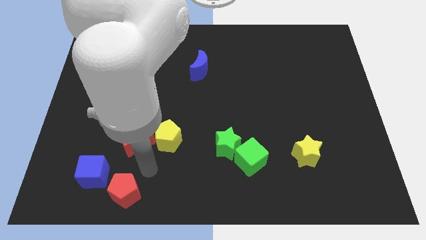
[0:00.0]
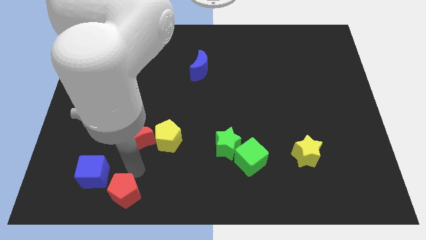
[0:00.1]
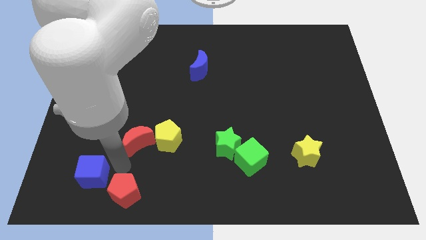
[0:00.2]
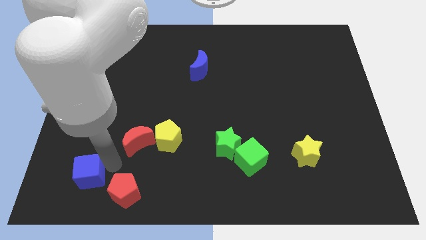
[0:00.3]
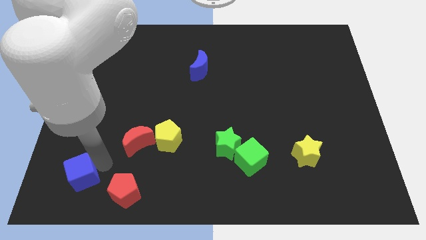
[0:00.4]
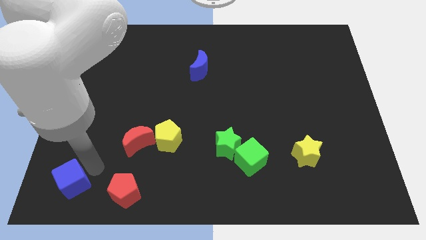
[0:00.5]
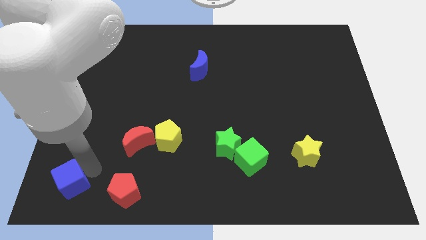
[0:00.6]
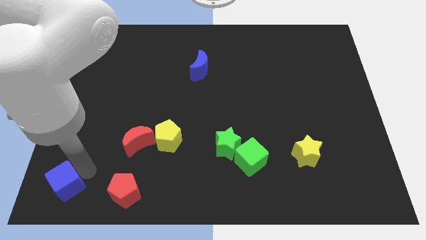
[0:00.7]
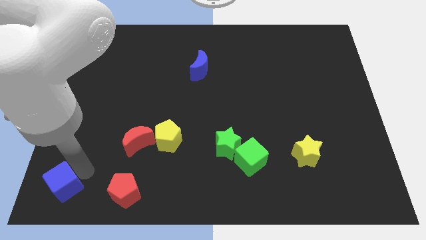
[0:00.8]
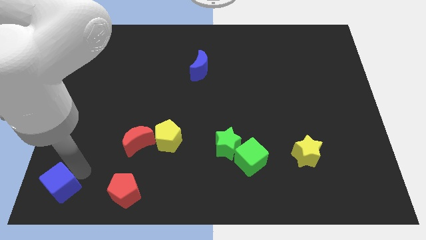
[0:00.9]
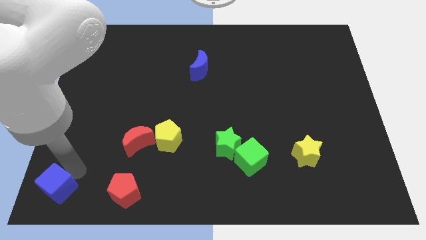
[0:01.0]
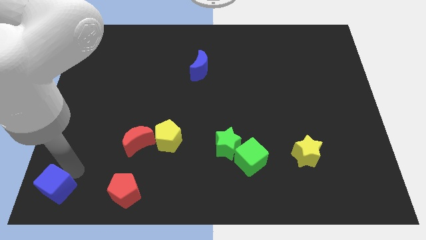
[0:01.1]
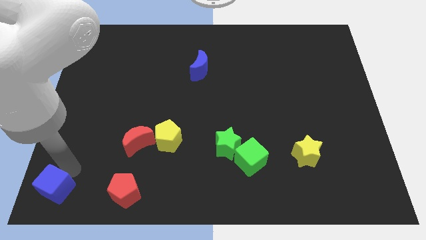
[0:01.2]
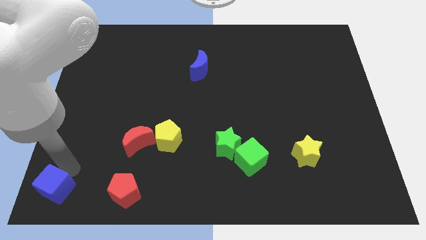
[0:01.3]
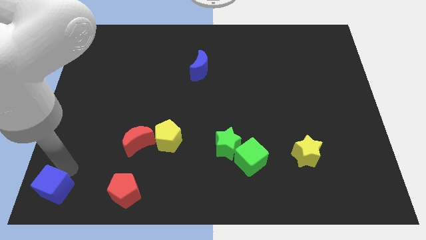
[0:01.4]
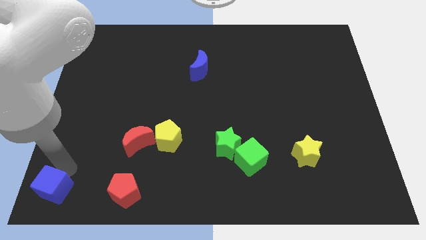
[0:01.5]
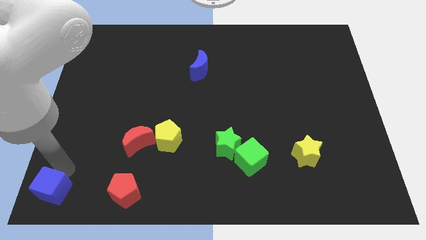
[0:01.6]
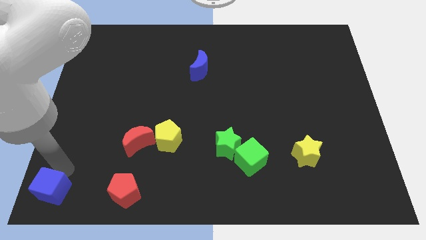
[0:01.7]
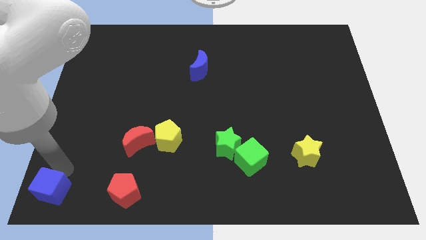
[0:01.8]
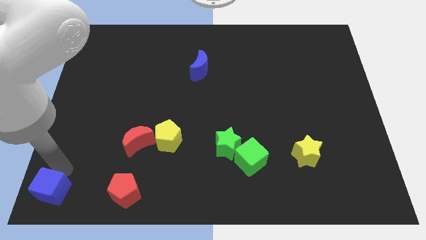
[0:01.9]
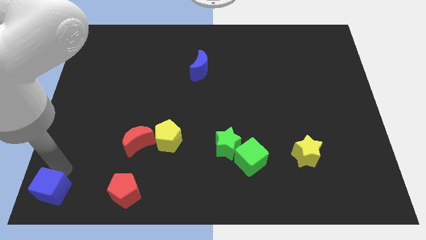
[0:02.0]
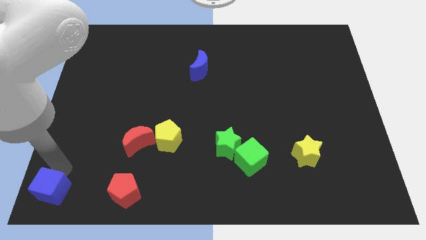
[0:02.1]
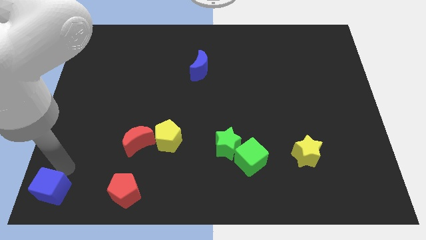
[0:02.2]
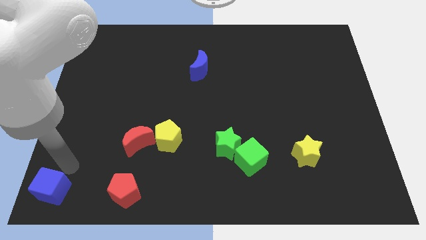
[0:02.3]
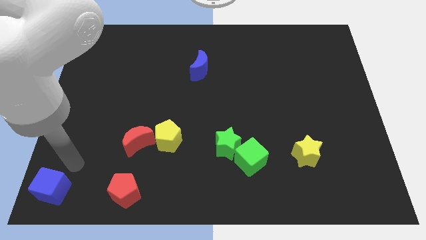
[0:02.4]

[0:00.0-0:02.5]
place blue cube at bottom left corner of the board

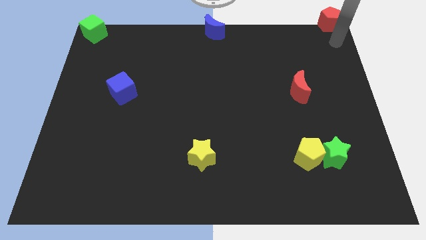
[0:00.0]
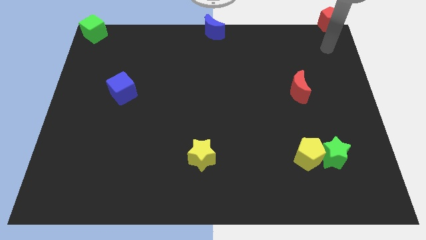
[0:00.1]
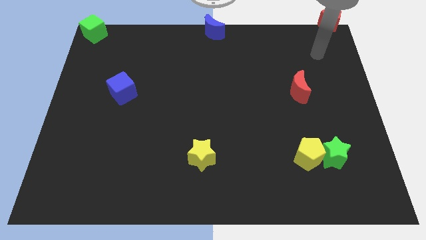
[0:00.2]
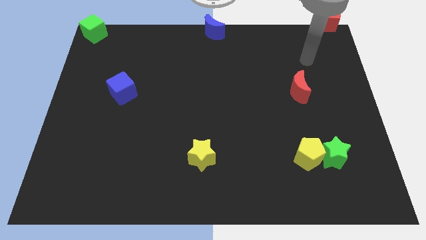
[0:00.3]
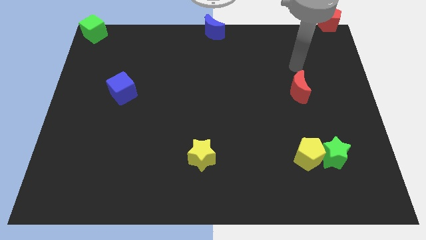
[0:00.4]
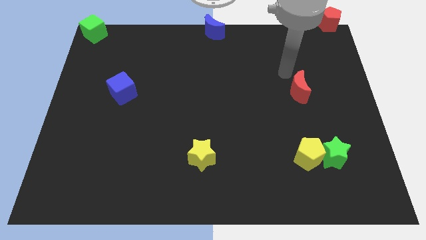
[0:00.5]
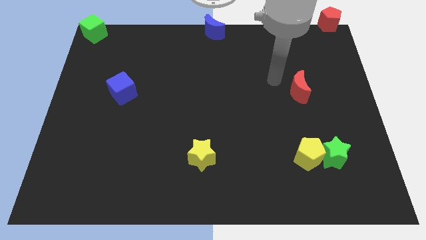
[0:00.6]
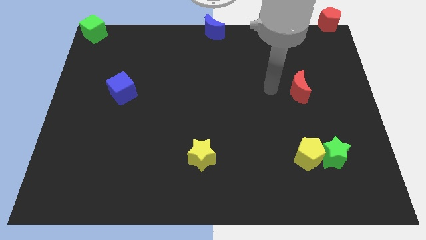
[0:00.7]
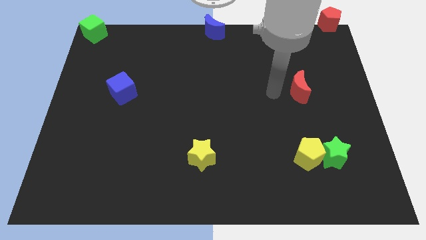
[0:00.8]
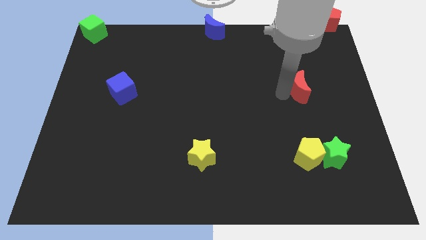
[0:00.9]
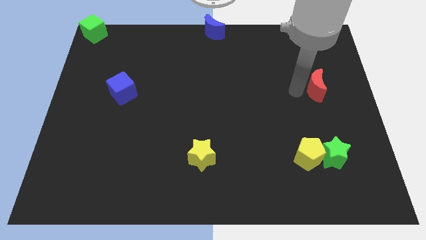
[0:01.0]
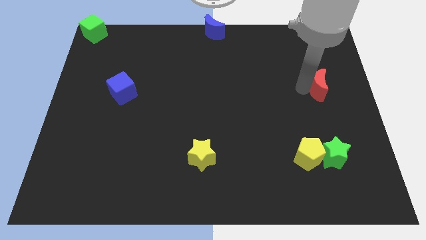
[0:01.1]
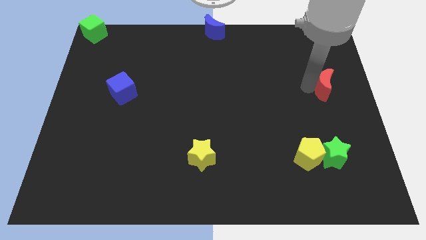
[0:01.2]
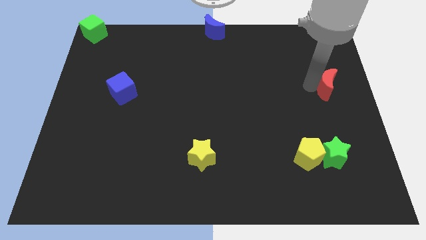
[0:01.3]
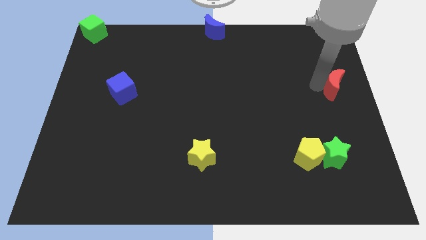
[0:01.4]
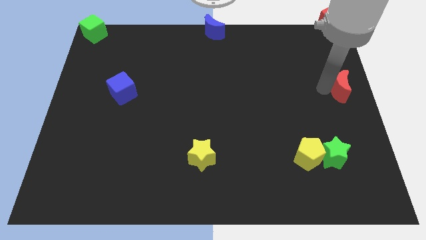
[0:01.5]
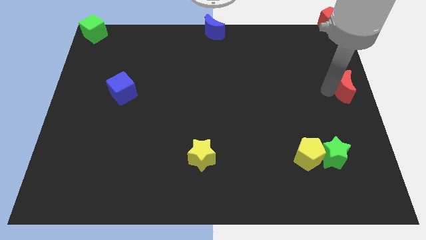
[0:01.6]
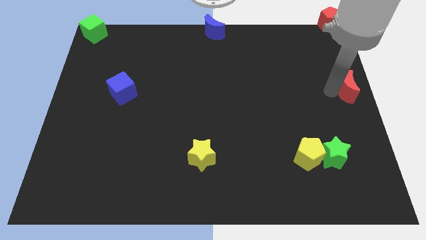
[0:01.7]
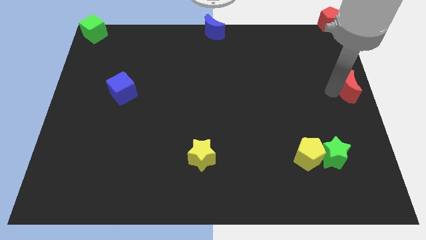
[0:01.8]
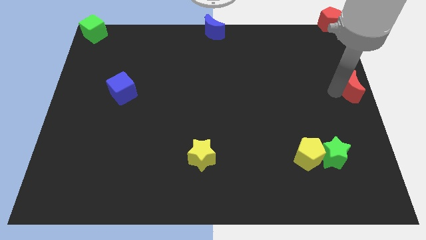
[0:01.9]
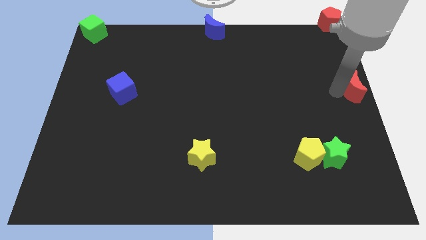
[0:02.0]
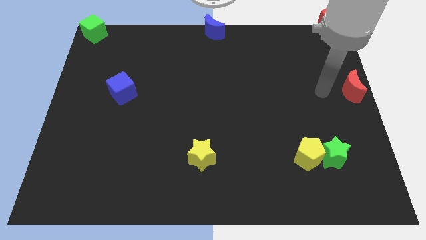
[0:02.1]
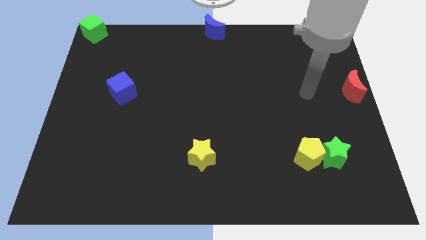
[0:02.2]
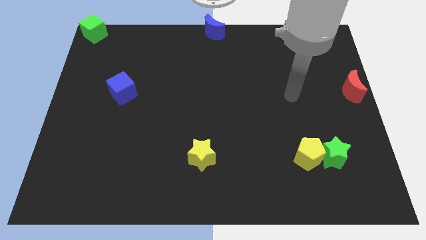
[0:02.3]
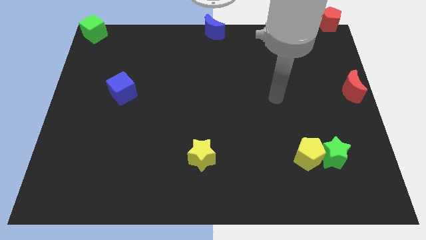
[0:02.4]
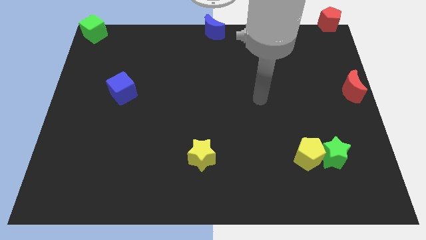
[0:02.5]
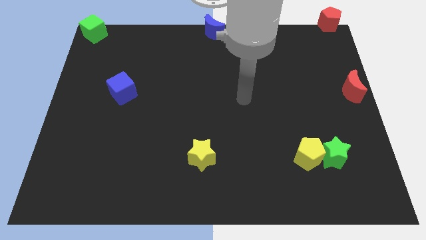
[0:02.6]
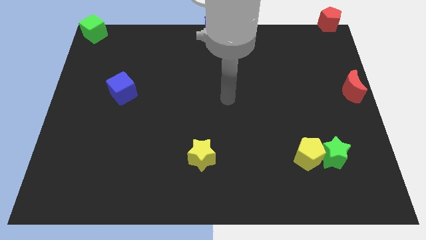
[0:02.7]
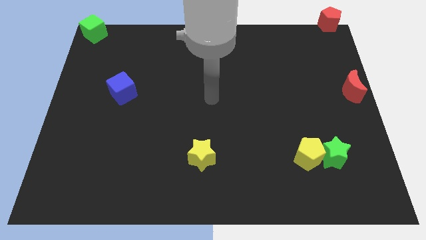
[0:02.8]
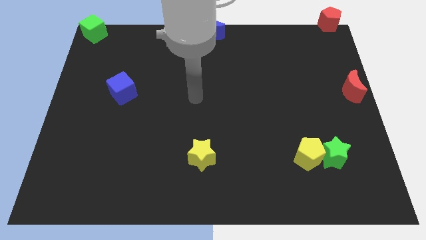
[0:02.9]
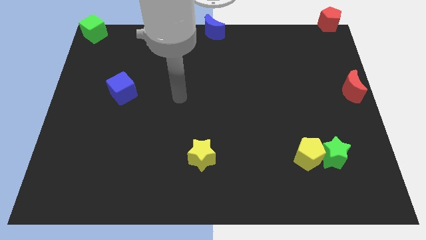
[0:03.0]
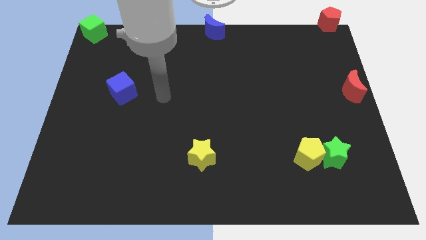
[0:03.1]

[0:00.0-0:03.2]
move red moon to the center right

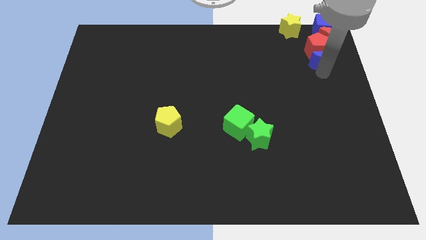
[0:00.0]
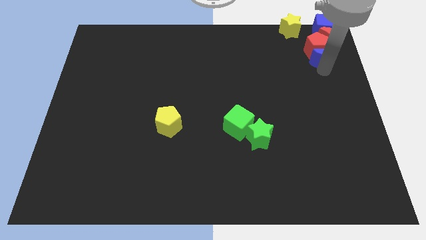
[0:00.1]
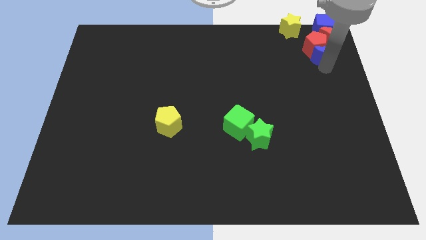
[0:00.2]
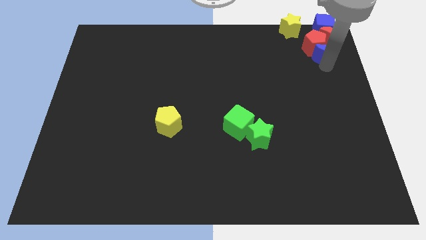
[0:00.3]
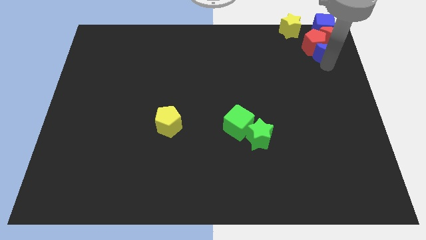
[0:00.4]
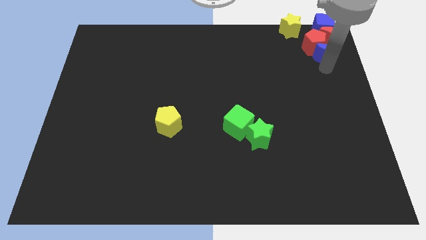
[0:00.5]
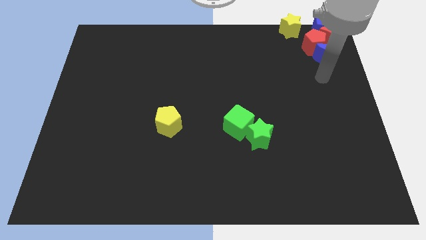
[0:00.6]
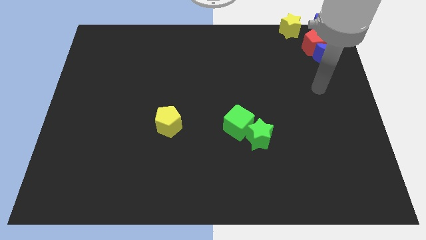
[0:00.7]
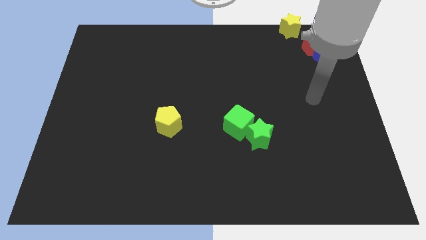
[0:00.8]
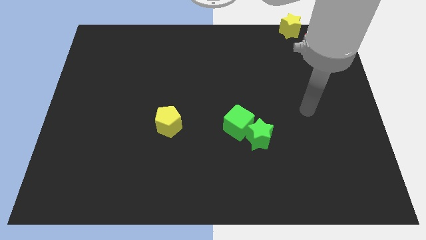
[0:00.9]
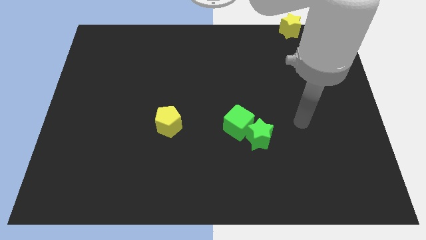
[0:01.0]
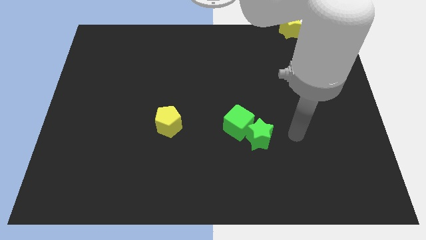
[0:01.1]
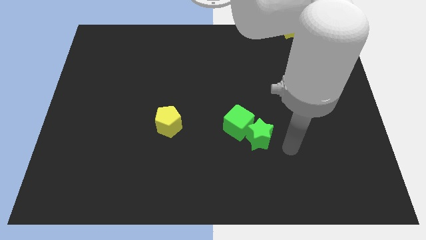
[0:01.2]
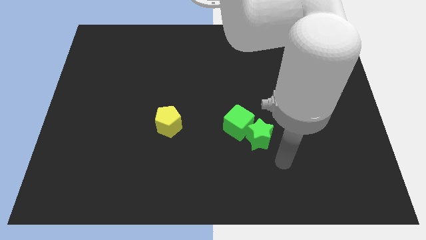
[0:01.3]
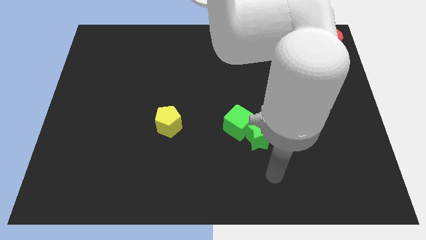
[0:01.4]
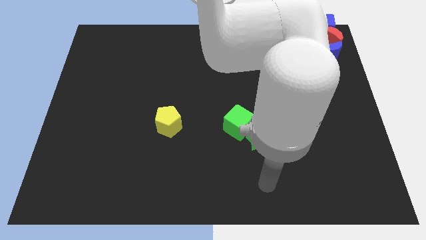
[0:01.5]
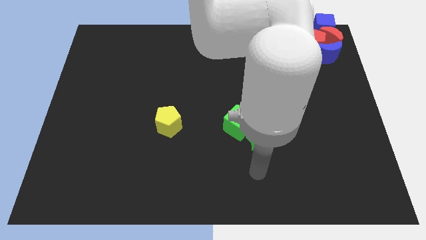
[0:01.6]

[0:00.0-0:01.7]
slide the blue moon into group of blocks

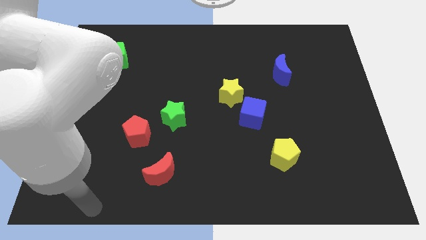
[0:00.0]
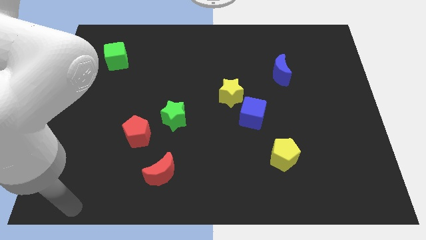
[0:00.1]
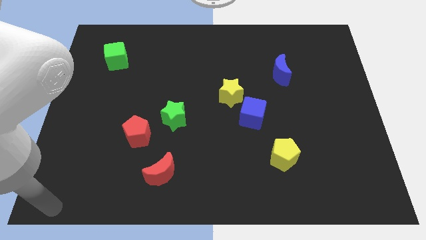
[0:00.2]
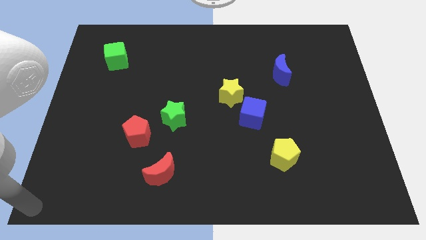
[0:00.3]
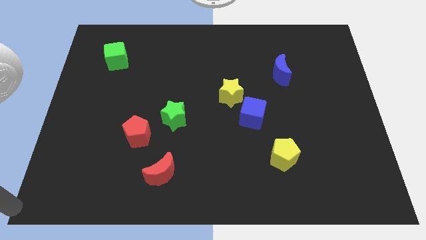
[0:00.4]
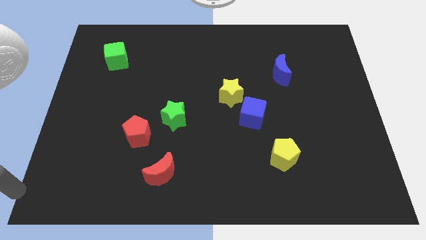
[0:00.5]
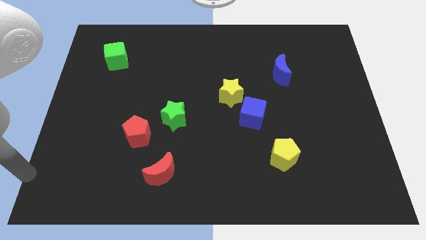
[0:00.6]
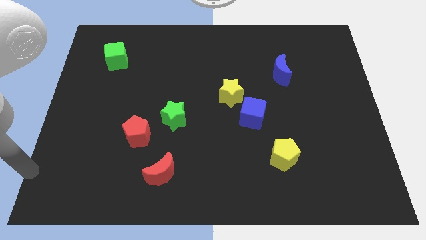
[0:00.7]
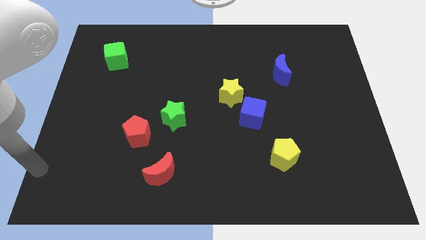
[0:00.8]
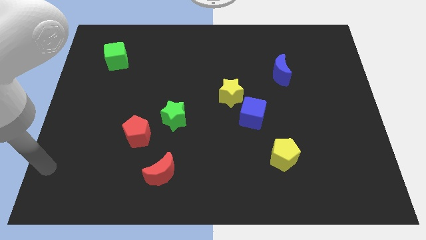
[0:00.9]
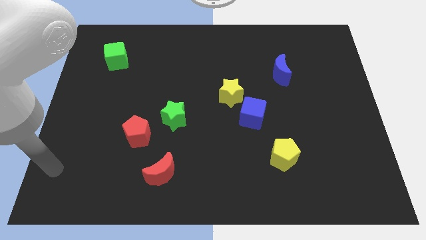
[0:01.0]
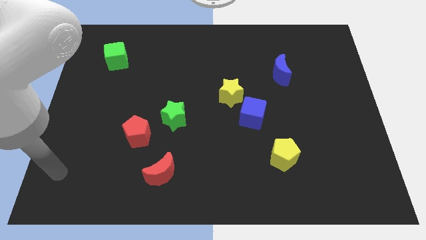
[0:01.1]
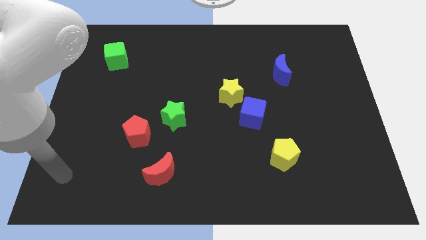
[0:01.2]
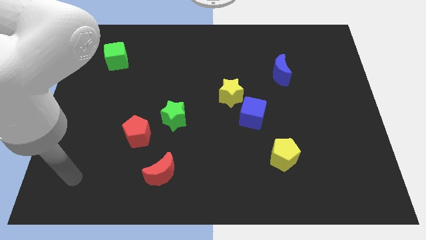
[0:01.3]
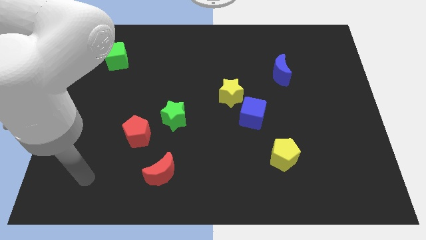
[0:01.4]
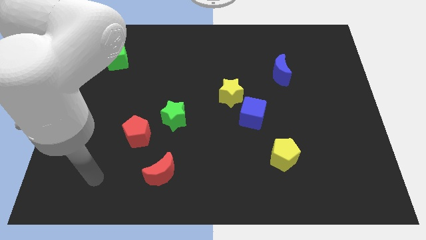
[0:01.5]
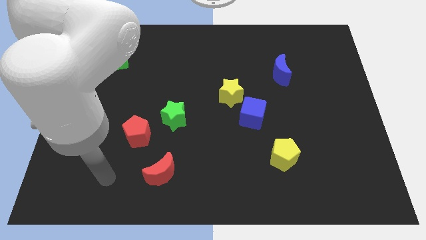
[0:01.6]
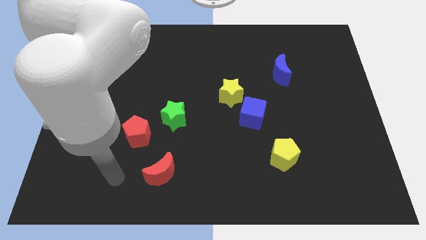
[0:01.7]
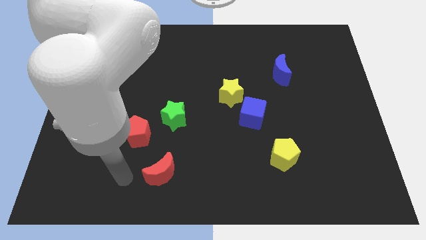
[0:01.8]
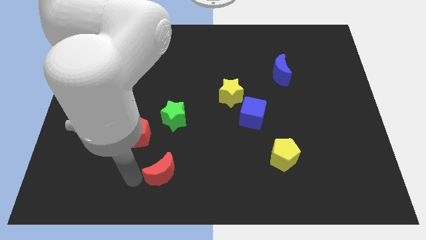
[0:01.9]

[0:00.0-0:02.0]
move the arm to the left of the red crescent
